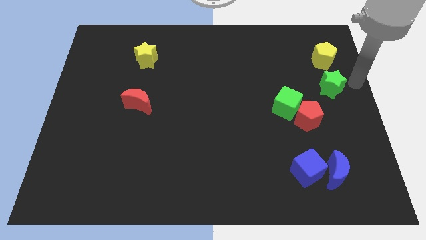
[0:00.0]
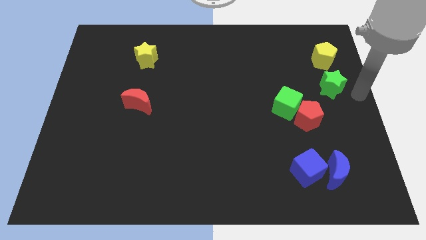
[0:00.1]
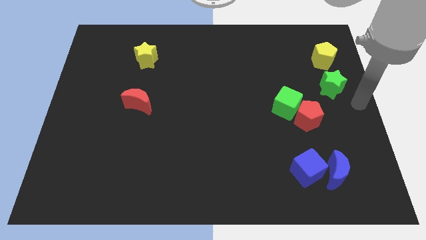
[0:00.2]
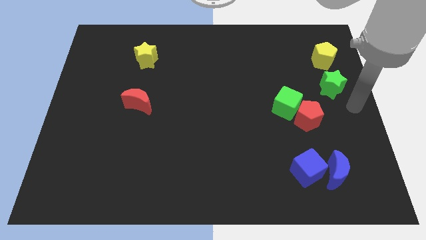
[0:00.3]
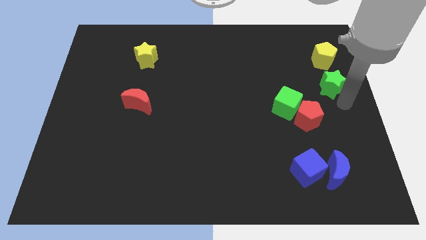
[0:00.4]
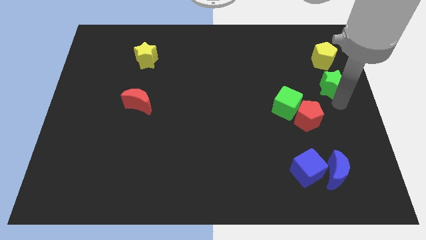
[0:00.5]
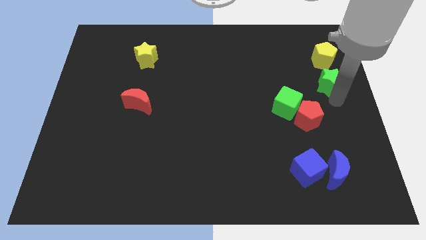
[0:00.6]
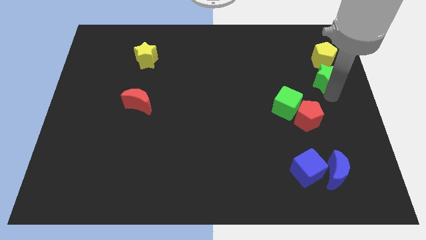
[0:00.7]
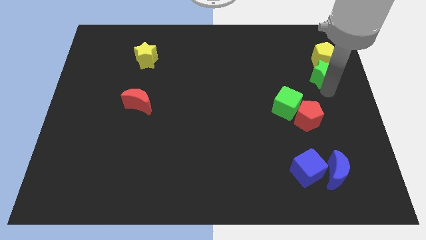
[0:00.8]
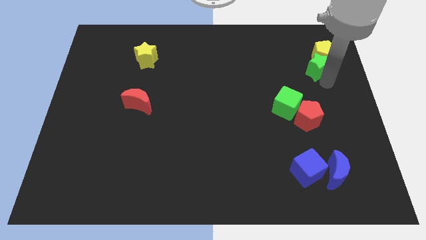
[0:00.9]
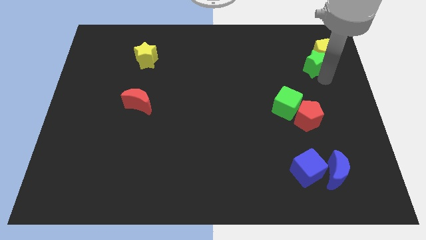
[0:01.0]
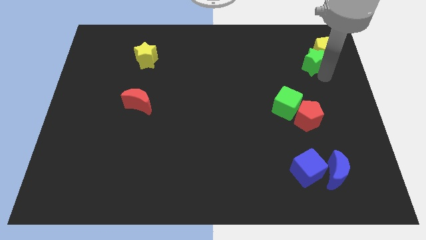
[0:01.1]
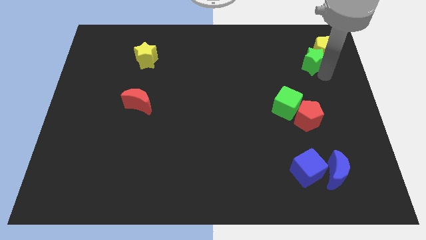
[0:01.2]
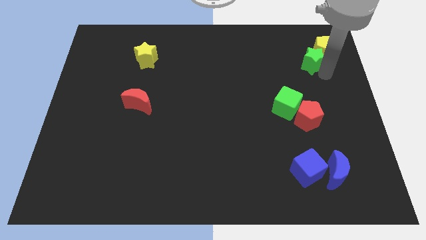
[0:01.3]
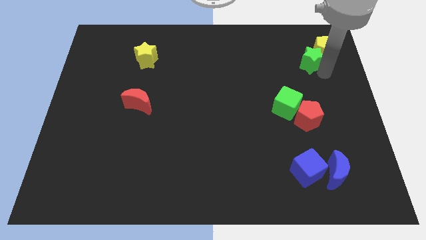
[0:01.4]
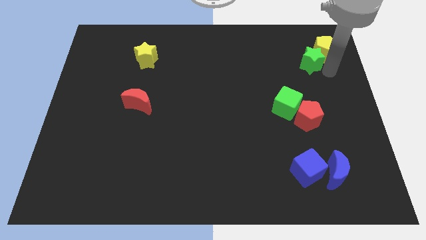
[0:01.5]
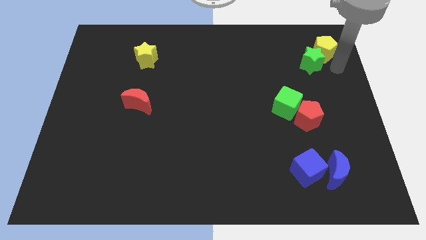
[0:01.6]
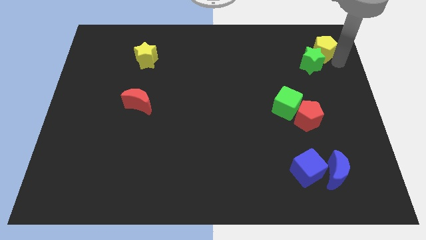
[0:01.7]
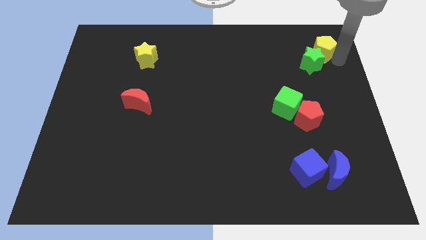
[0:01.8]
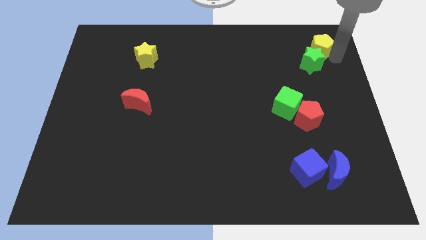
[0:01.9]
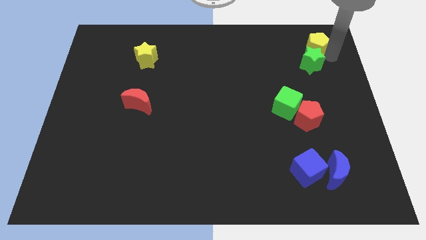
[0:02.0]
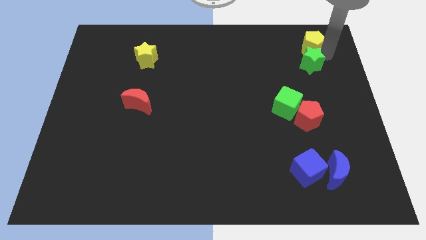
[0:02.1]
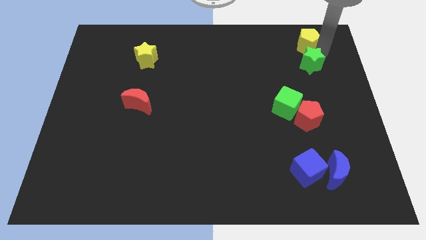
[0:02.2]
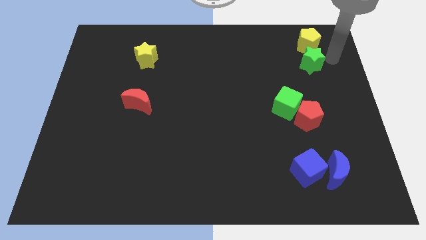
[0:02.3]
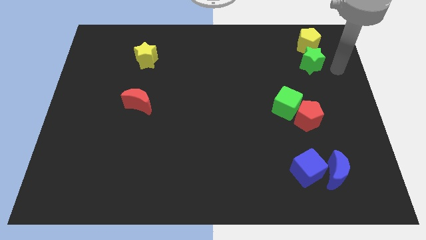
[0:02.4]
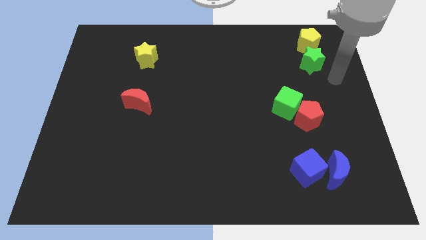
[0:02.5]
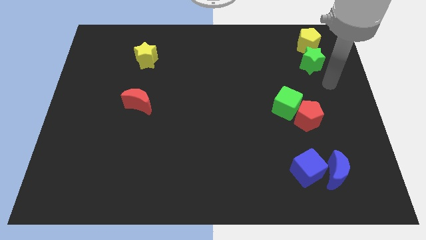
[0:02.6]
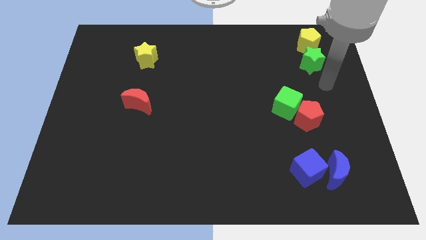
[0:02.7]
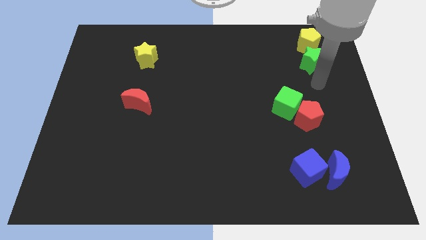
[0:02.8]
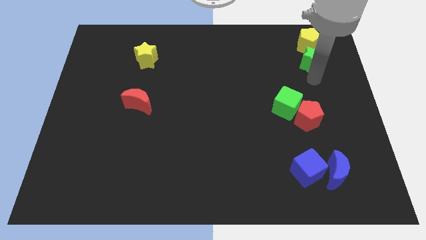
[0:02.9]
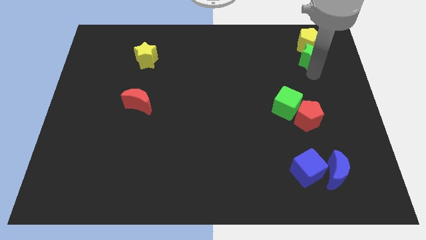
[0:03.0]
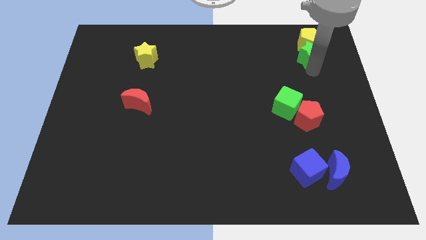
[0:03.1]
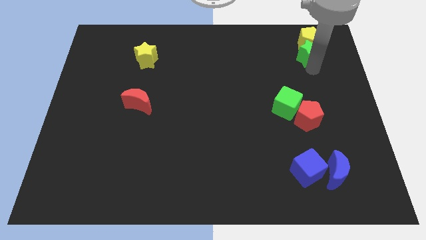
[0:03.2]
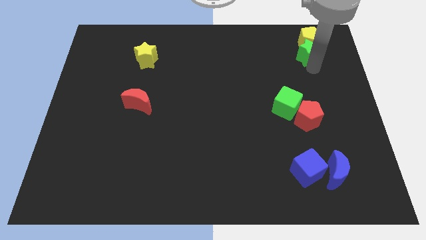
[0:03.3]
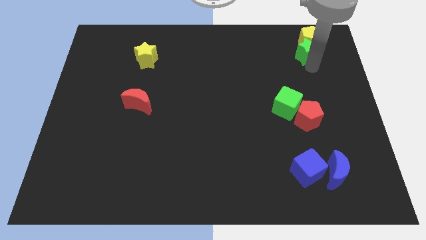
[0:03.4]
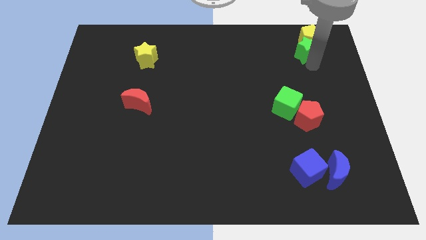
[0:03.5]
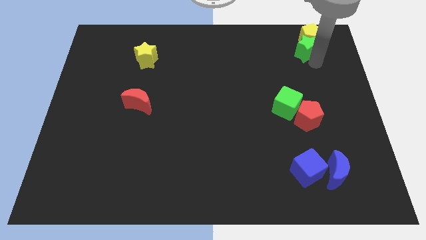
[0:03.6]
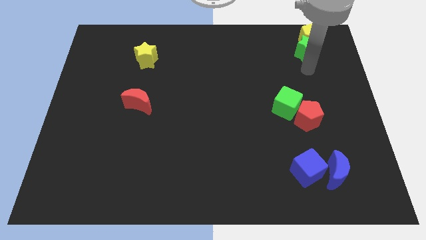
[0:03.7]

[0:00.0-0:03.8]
push the green star into the yellow pentagon to the top right of the board

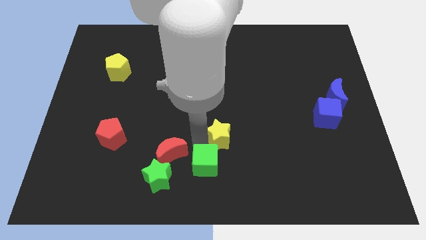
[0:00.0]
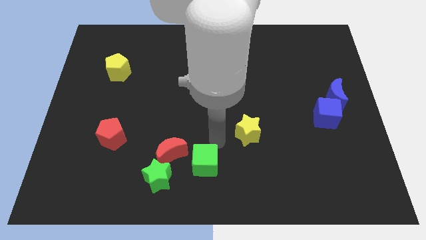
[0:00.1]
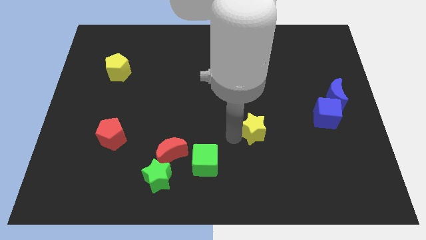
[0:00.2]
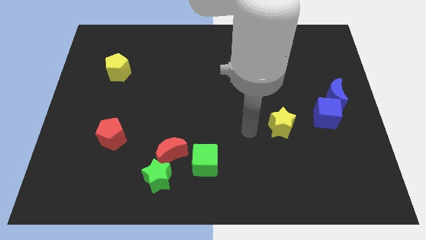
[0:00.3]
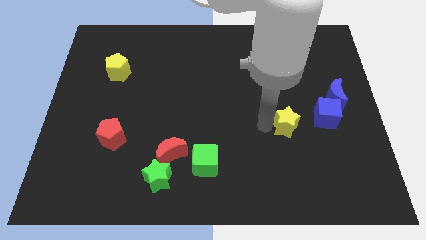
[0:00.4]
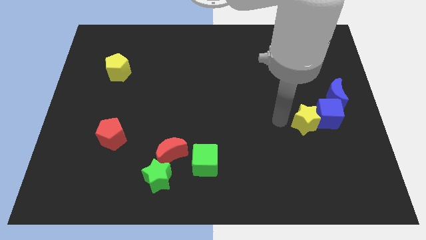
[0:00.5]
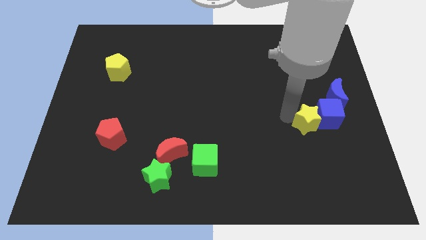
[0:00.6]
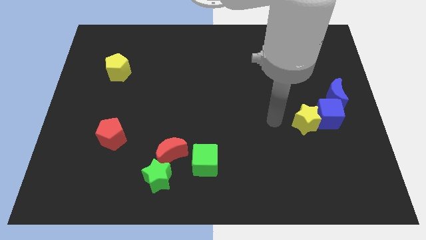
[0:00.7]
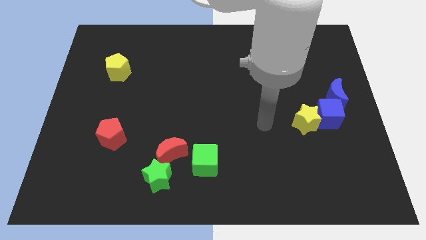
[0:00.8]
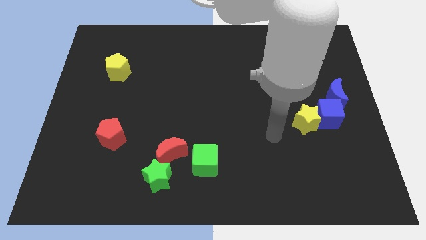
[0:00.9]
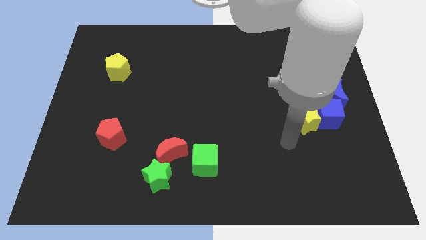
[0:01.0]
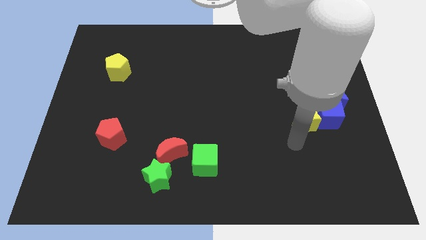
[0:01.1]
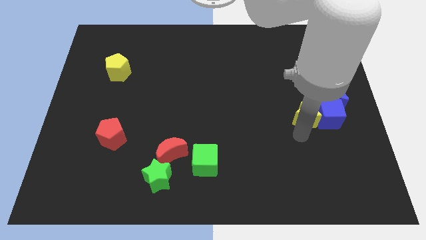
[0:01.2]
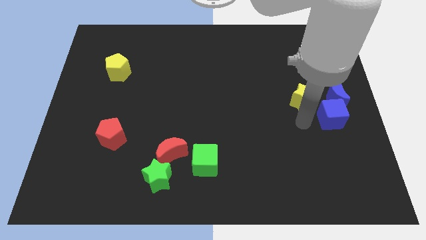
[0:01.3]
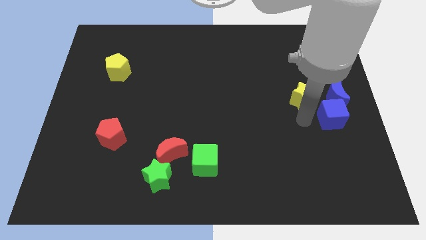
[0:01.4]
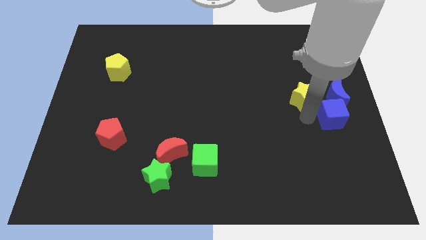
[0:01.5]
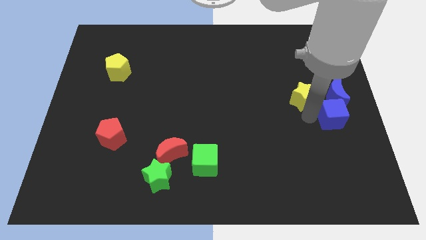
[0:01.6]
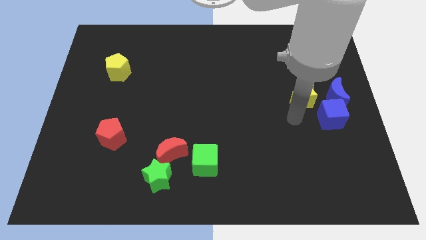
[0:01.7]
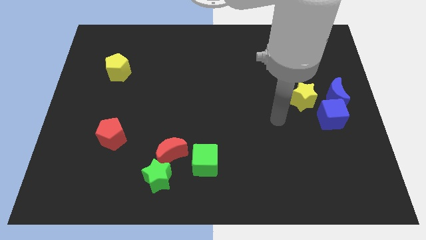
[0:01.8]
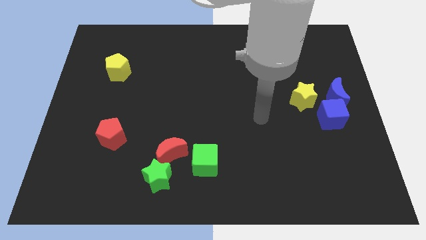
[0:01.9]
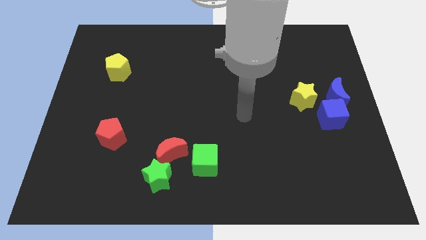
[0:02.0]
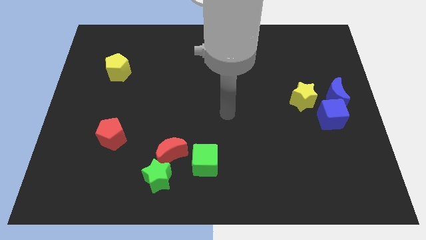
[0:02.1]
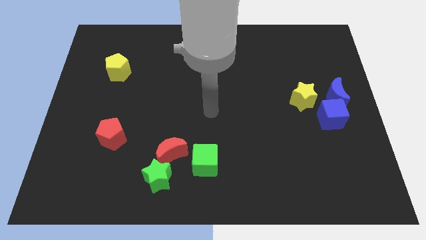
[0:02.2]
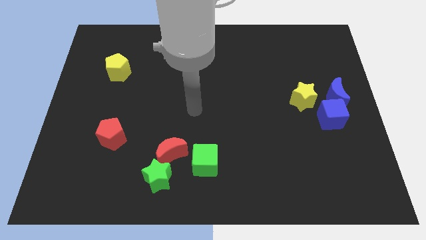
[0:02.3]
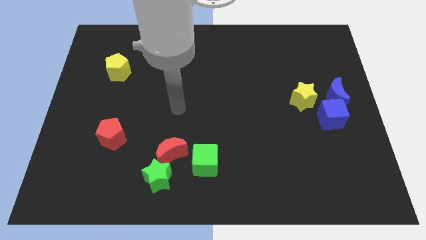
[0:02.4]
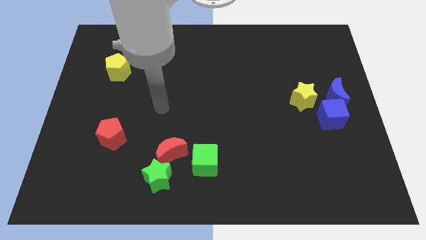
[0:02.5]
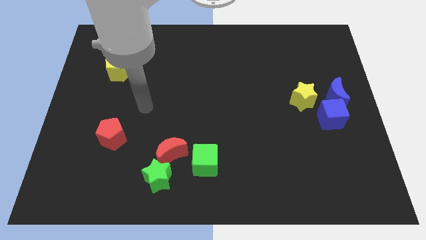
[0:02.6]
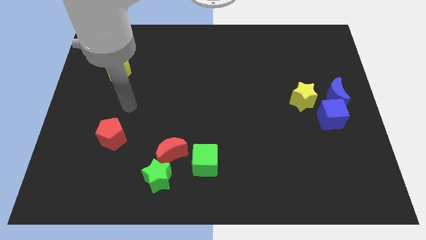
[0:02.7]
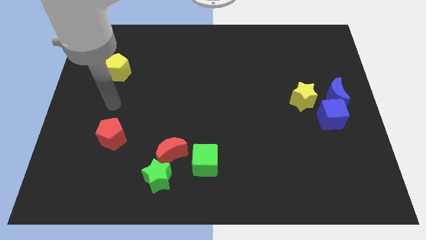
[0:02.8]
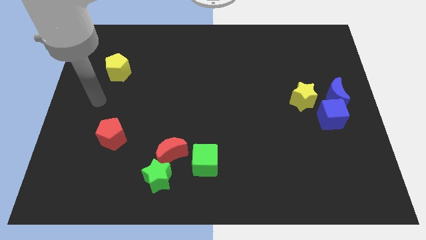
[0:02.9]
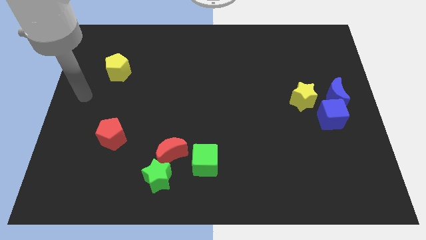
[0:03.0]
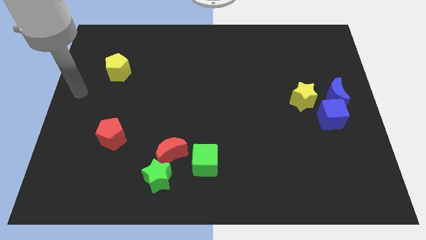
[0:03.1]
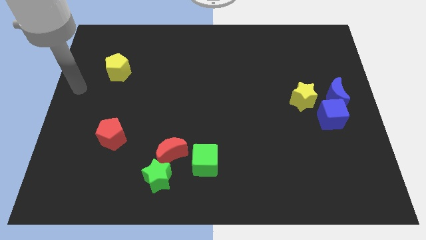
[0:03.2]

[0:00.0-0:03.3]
push the yellow star at the left side of the blue moon

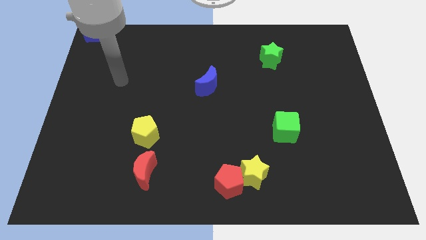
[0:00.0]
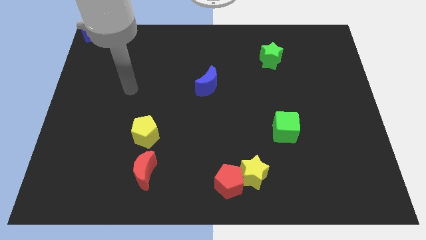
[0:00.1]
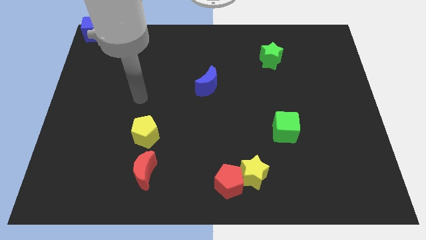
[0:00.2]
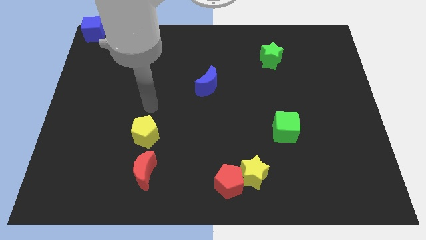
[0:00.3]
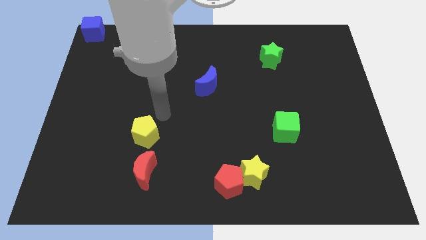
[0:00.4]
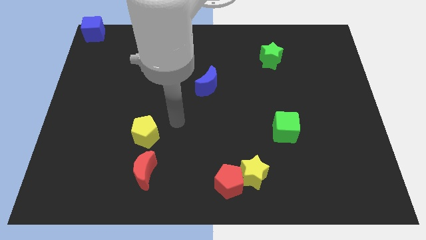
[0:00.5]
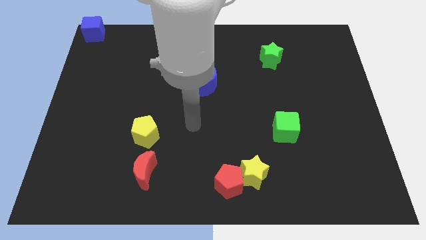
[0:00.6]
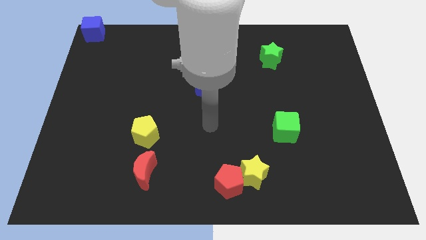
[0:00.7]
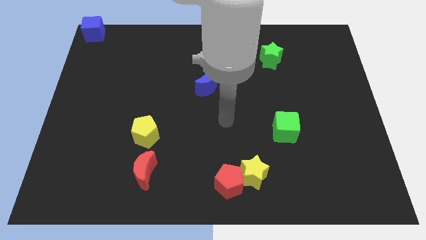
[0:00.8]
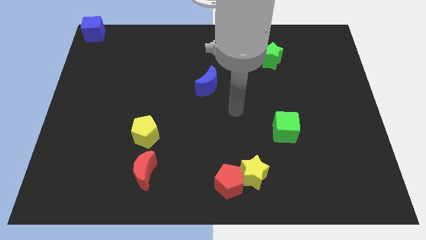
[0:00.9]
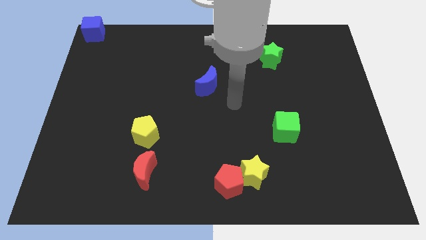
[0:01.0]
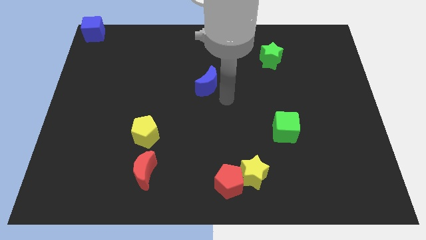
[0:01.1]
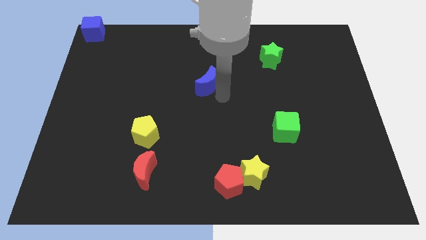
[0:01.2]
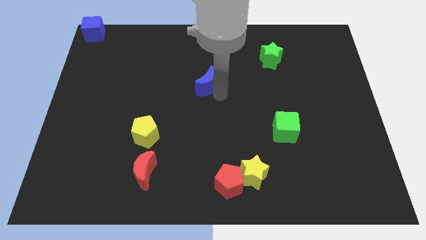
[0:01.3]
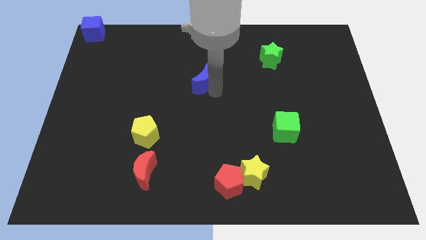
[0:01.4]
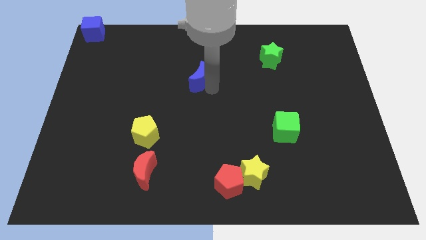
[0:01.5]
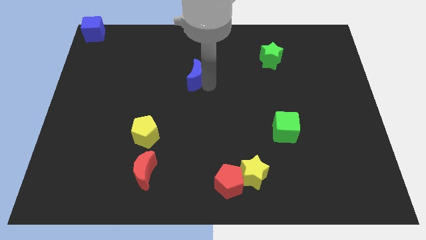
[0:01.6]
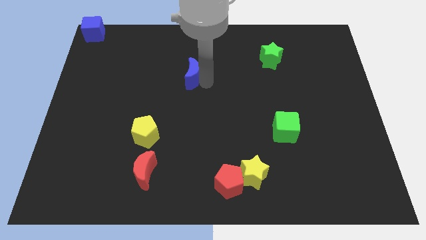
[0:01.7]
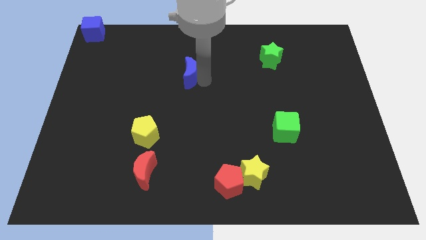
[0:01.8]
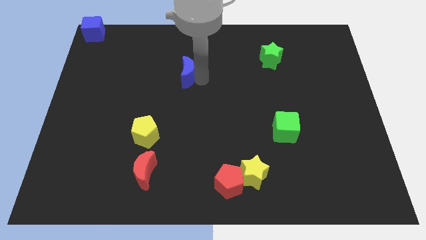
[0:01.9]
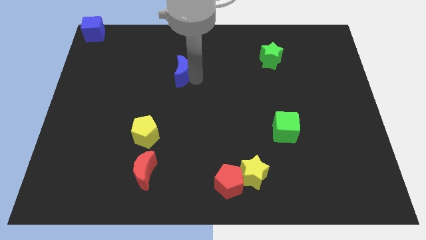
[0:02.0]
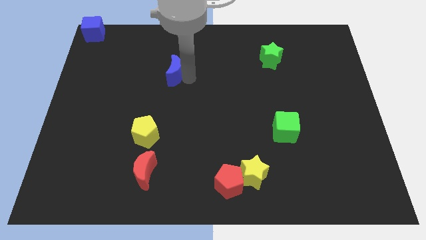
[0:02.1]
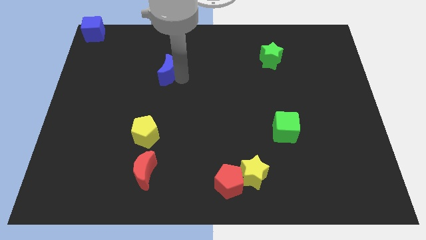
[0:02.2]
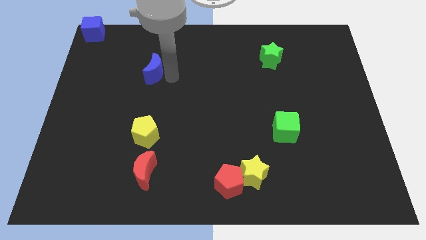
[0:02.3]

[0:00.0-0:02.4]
place the blue moon above the yellow pentagon
